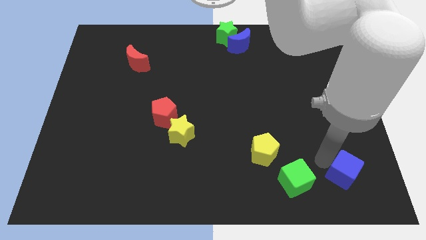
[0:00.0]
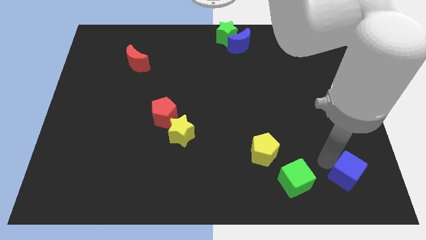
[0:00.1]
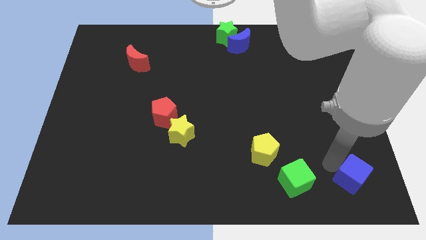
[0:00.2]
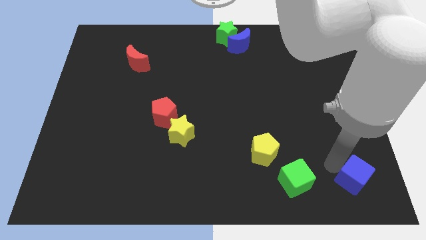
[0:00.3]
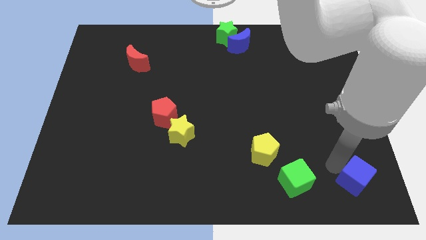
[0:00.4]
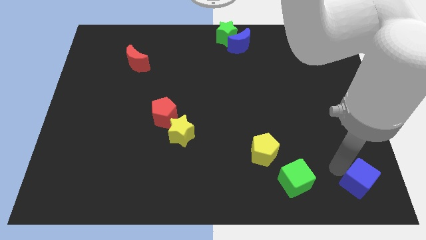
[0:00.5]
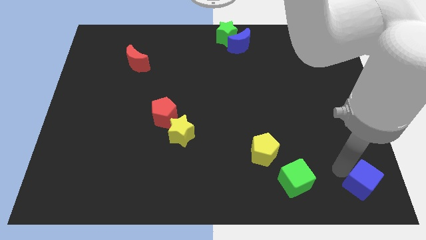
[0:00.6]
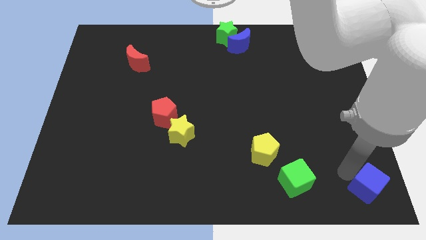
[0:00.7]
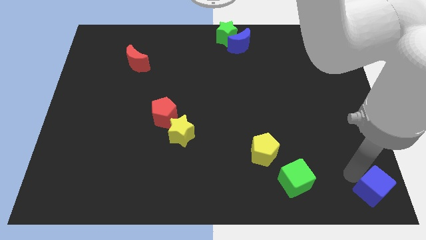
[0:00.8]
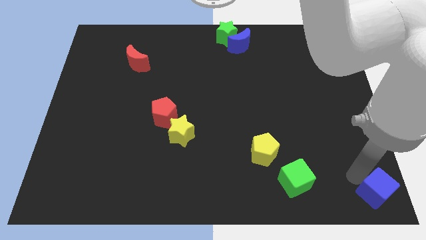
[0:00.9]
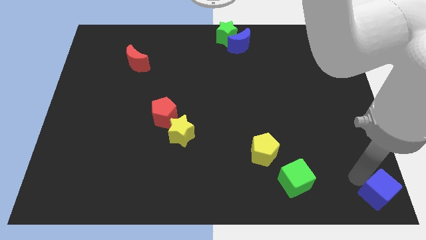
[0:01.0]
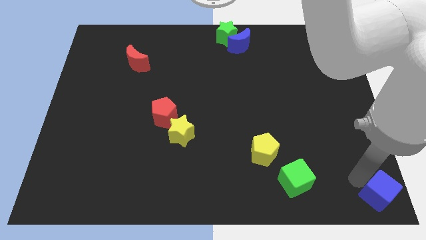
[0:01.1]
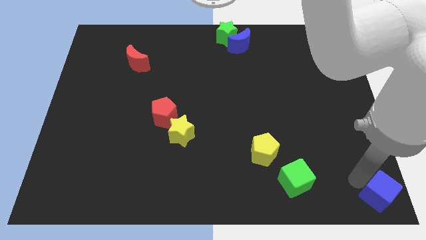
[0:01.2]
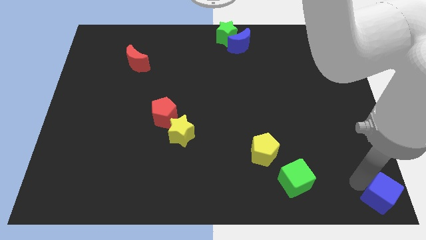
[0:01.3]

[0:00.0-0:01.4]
move the blue cube to the bottom right corner

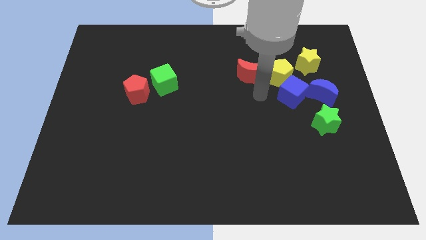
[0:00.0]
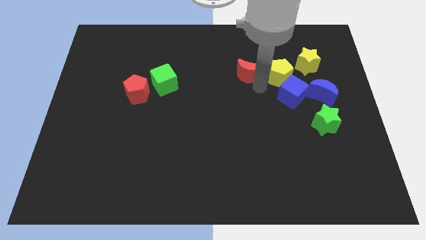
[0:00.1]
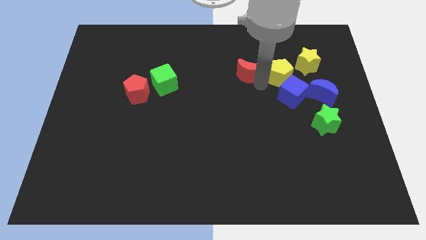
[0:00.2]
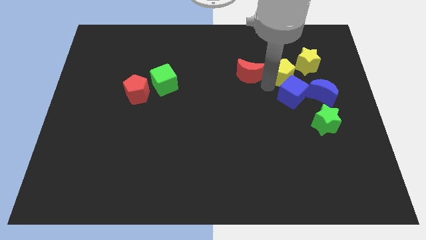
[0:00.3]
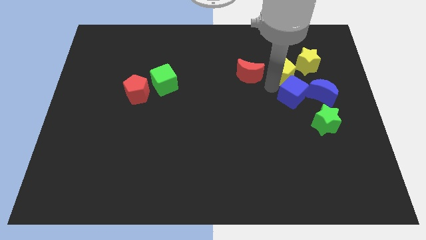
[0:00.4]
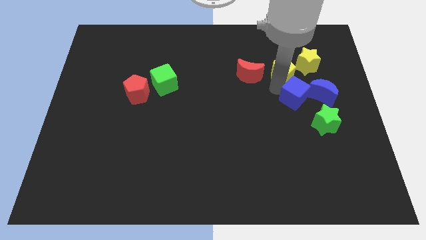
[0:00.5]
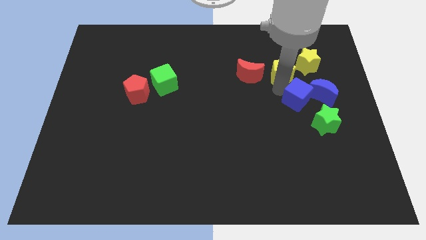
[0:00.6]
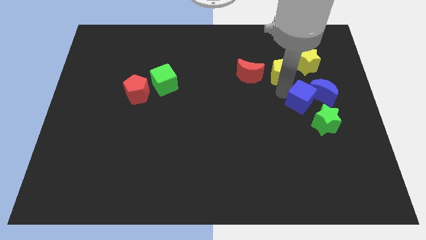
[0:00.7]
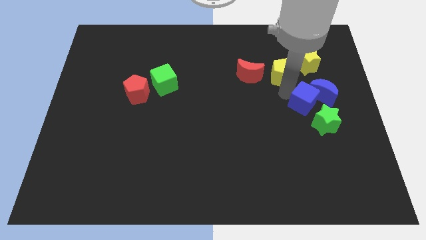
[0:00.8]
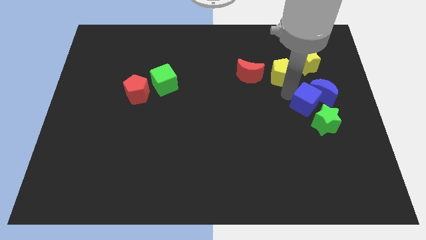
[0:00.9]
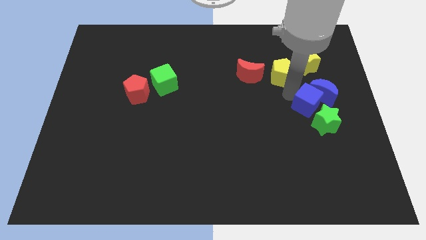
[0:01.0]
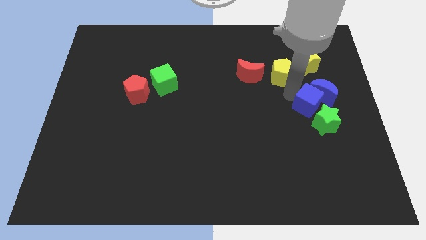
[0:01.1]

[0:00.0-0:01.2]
move blue cube in to blue crescent

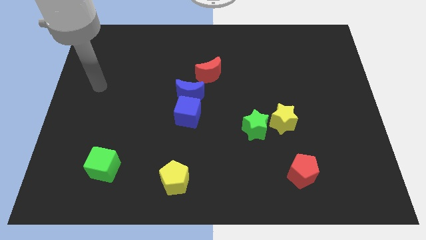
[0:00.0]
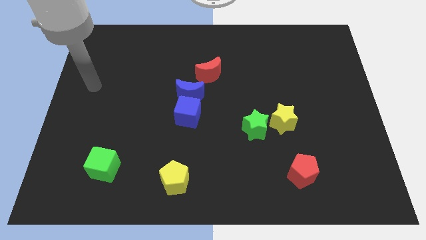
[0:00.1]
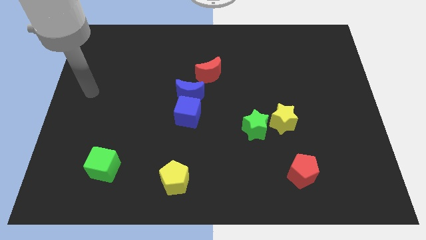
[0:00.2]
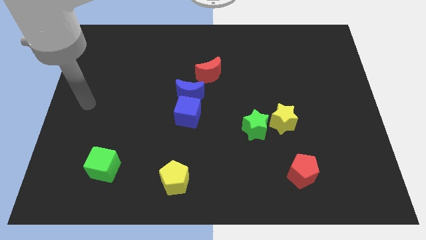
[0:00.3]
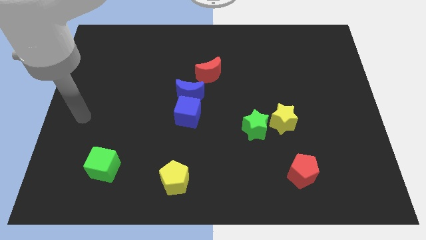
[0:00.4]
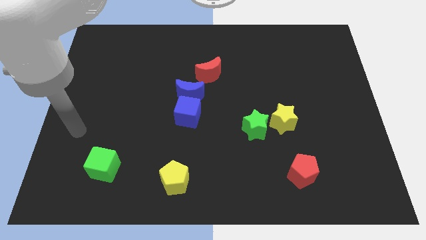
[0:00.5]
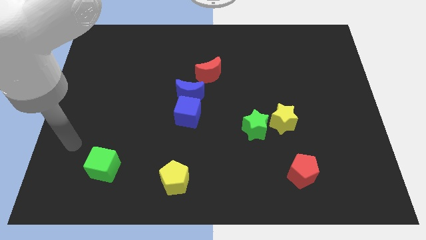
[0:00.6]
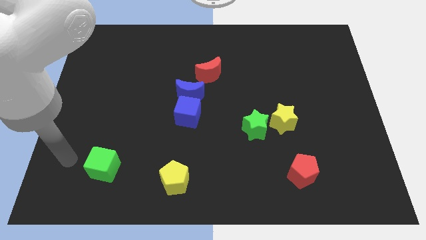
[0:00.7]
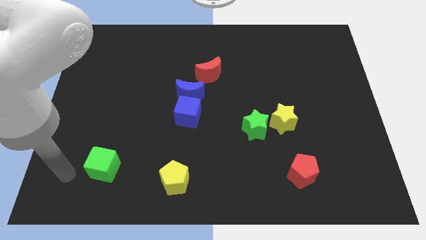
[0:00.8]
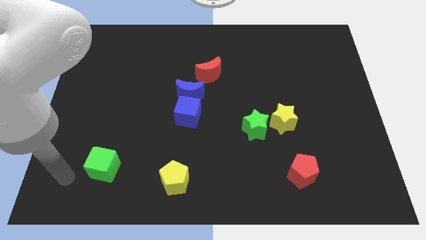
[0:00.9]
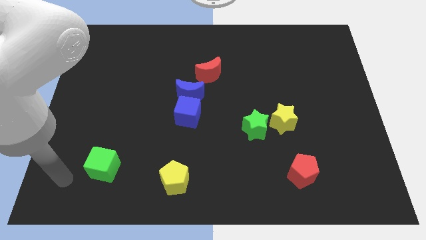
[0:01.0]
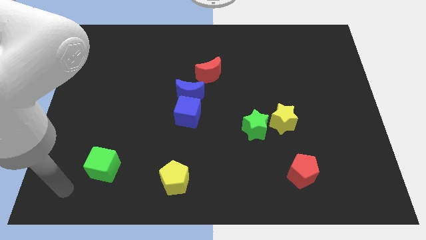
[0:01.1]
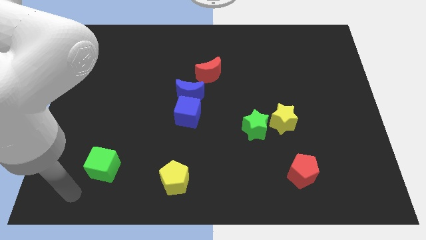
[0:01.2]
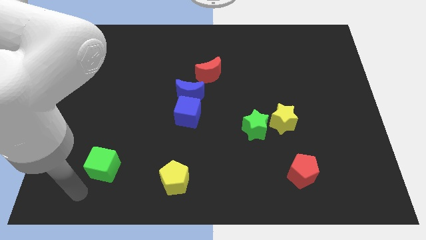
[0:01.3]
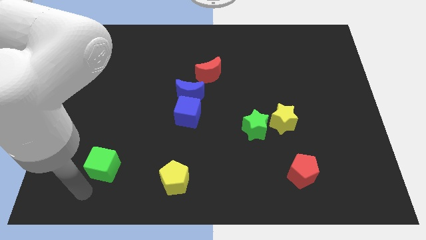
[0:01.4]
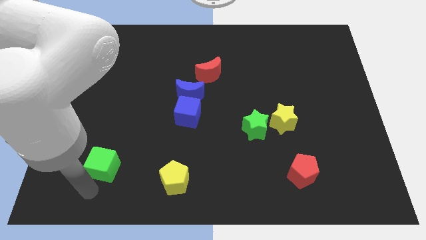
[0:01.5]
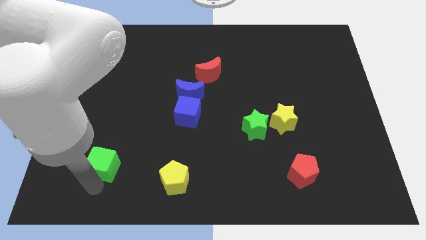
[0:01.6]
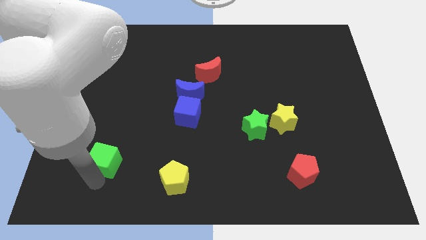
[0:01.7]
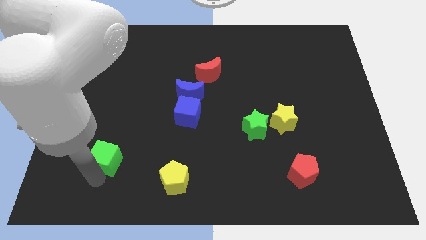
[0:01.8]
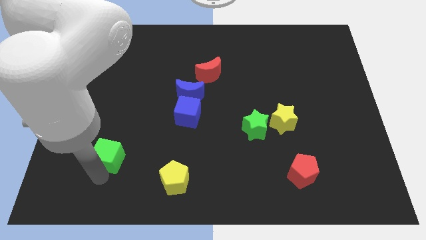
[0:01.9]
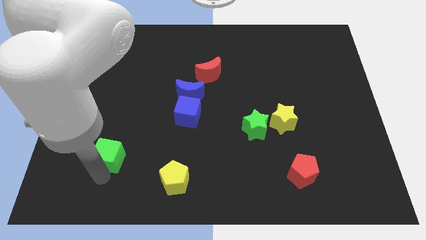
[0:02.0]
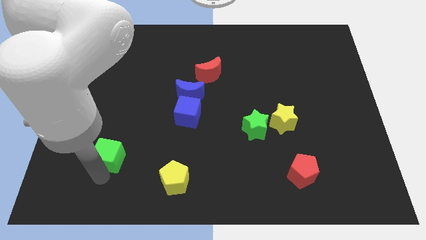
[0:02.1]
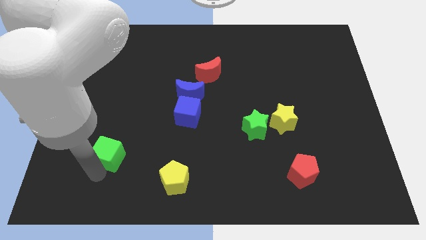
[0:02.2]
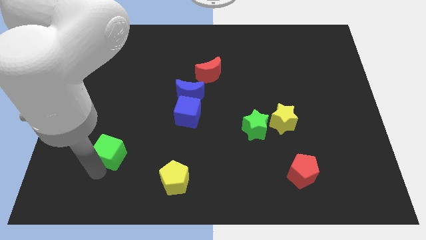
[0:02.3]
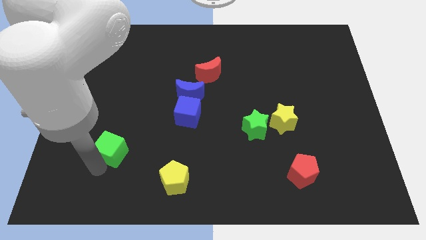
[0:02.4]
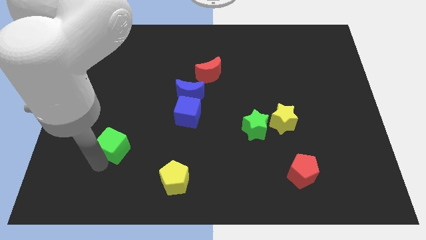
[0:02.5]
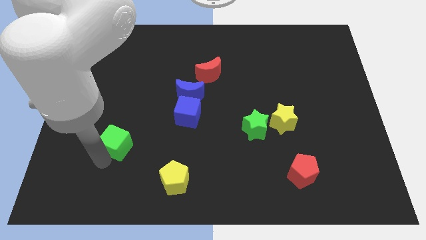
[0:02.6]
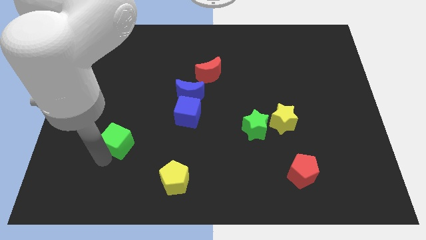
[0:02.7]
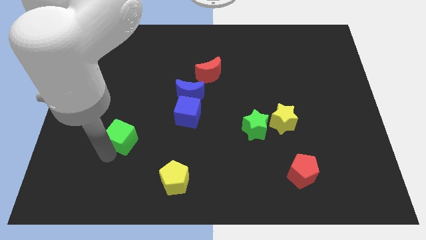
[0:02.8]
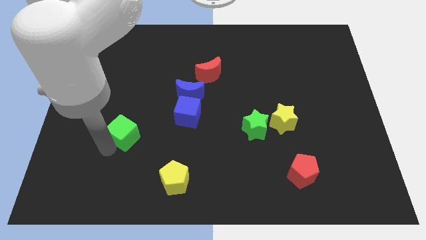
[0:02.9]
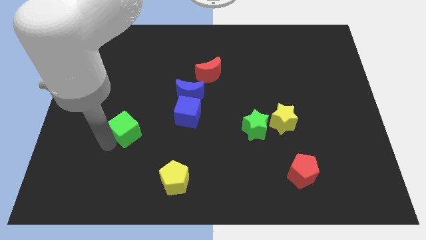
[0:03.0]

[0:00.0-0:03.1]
push the green cube to the top left of the yellow pentagon

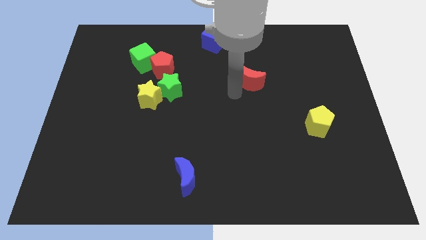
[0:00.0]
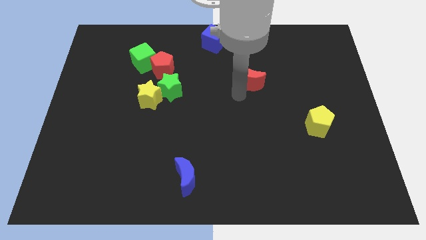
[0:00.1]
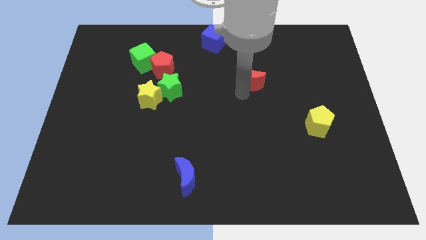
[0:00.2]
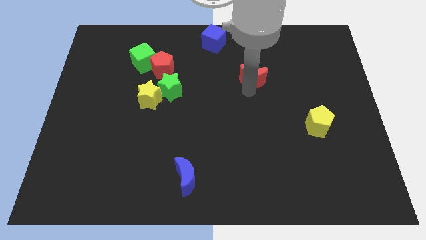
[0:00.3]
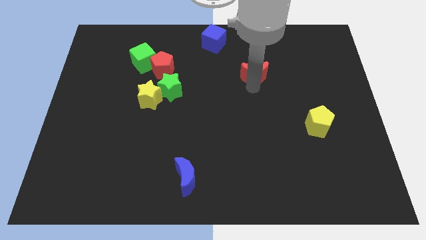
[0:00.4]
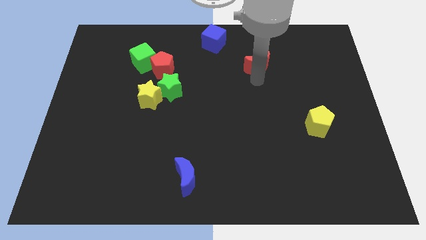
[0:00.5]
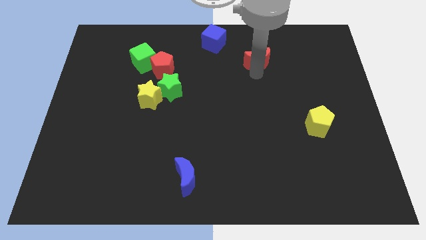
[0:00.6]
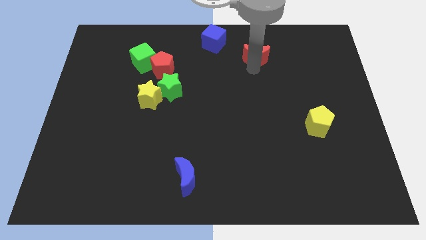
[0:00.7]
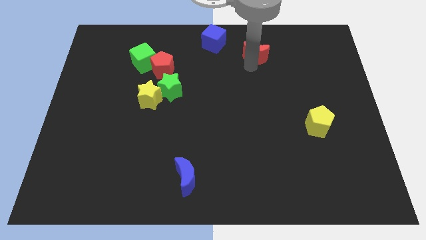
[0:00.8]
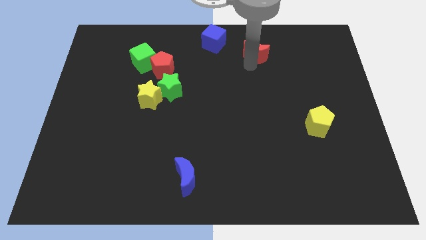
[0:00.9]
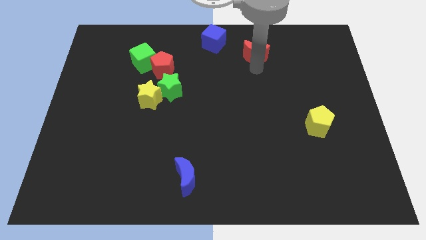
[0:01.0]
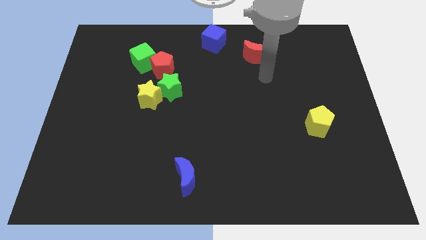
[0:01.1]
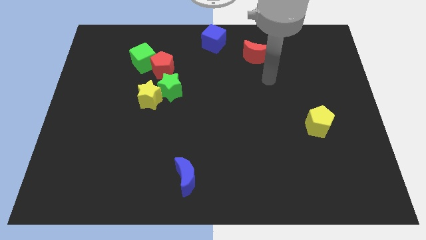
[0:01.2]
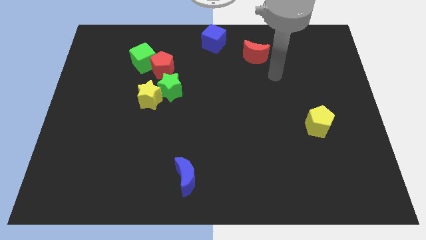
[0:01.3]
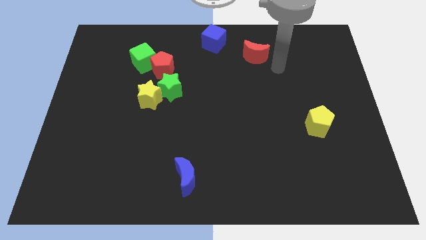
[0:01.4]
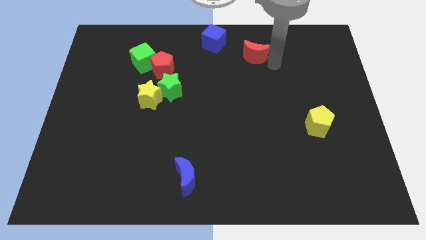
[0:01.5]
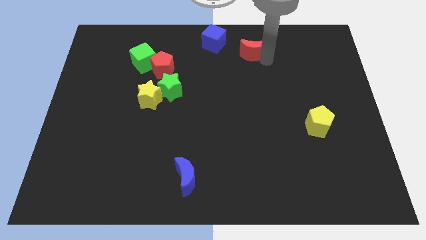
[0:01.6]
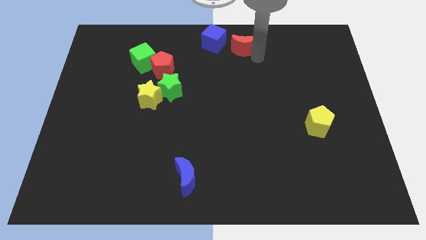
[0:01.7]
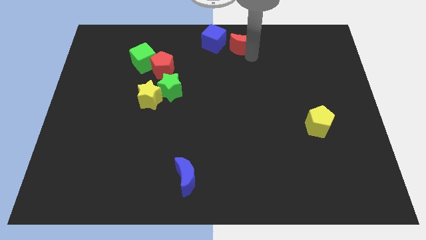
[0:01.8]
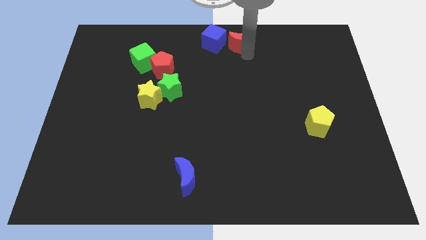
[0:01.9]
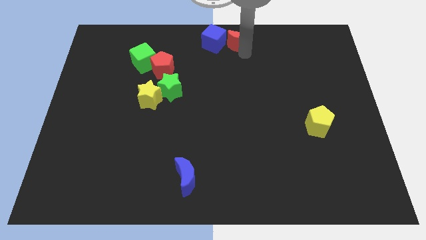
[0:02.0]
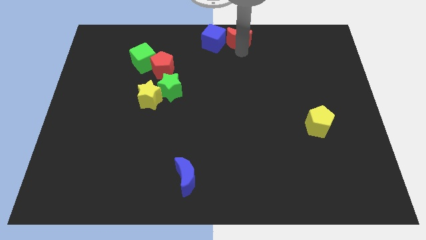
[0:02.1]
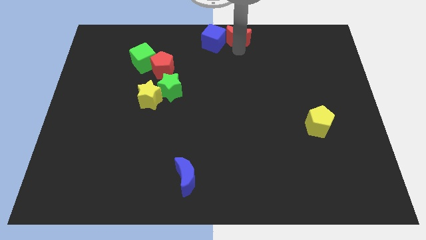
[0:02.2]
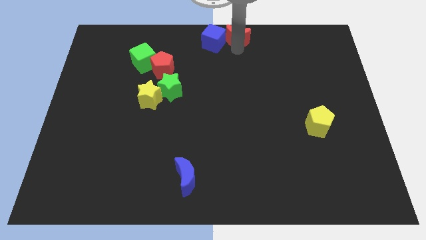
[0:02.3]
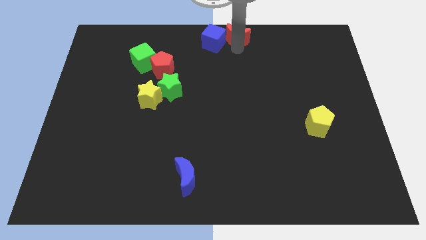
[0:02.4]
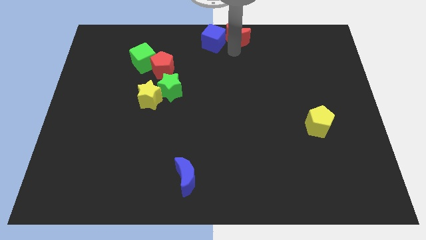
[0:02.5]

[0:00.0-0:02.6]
push the red moon towards the blue cube

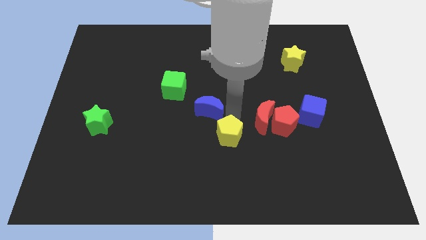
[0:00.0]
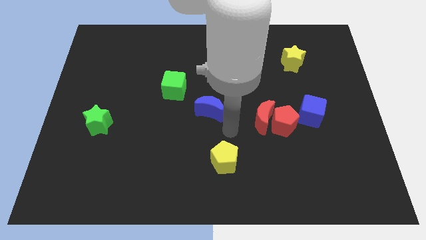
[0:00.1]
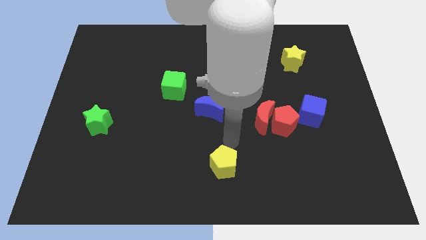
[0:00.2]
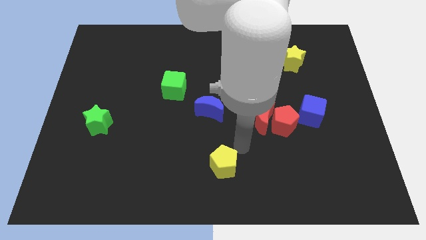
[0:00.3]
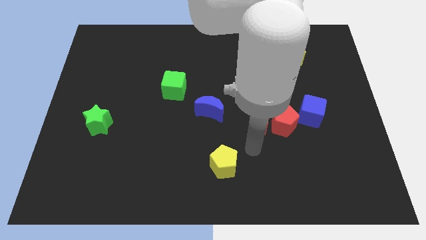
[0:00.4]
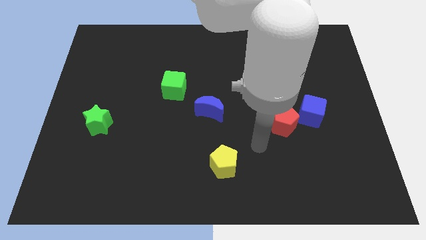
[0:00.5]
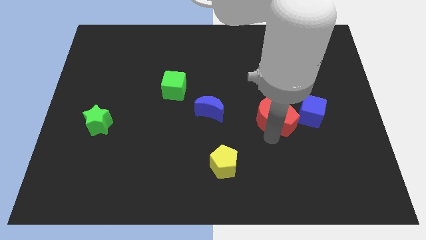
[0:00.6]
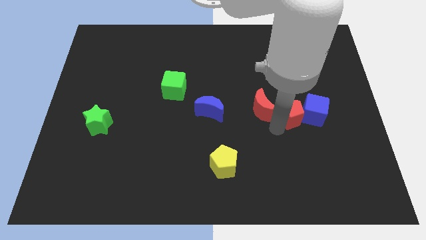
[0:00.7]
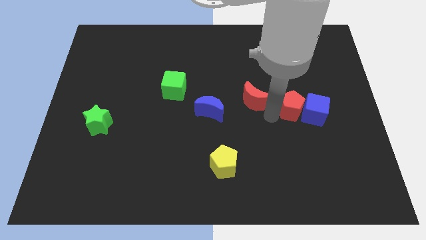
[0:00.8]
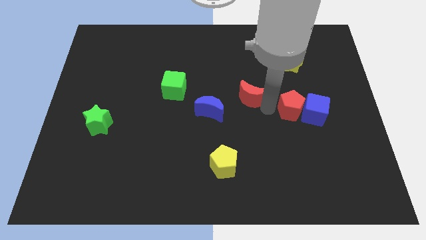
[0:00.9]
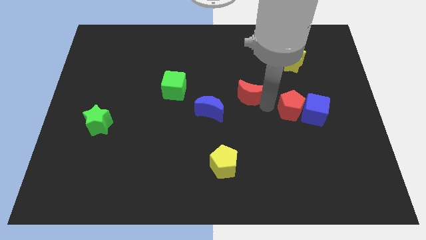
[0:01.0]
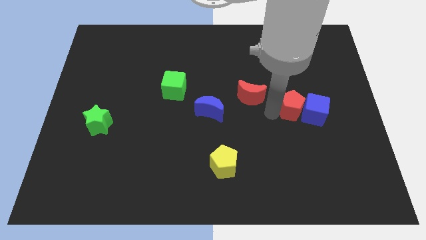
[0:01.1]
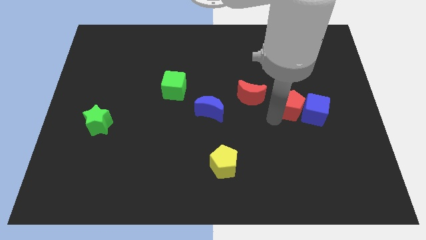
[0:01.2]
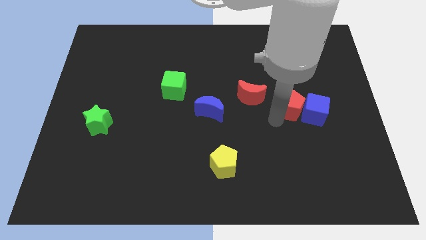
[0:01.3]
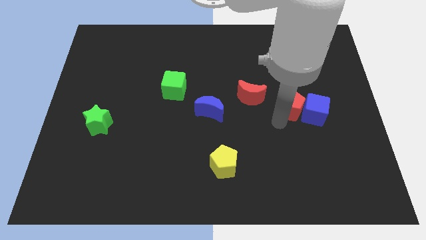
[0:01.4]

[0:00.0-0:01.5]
separate the red crescent from the red pentagon
